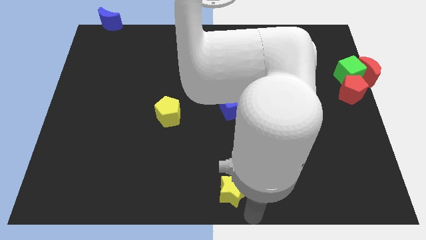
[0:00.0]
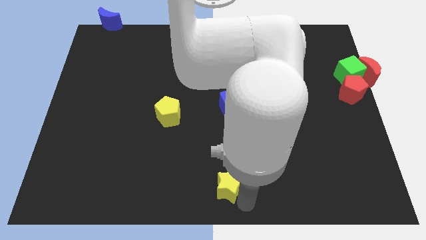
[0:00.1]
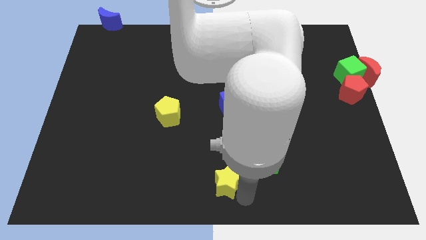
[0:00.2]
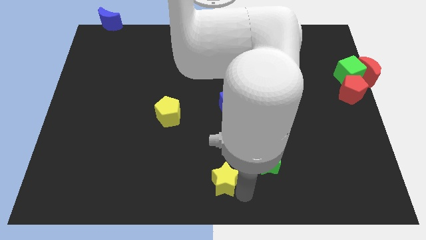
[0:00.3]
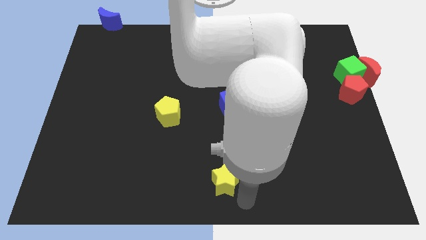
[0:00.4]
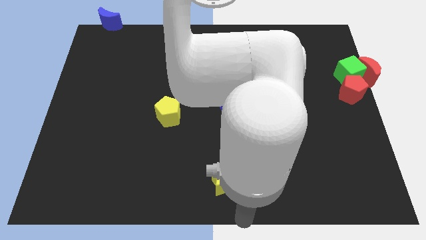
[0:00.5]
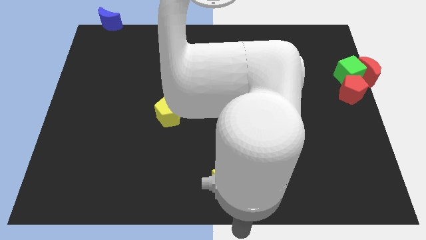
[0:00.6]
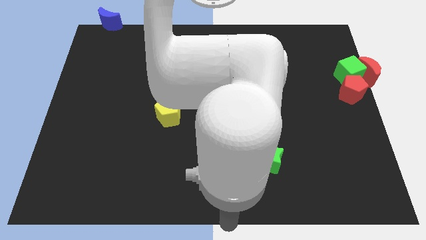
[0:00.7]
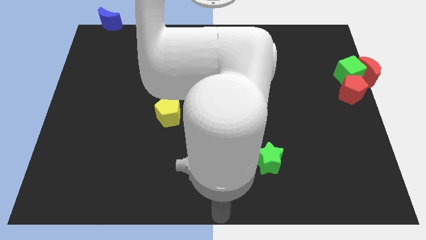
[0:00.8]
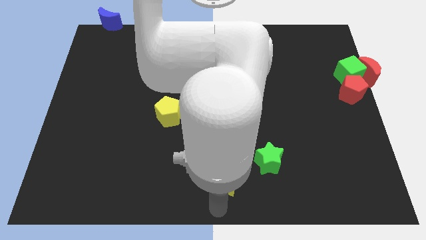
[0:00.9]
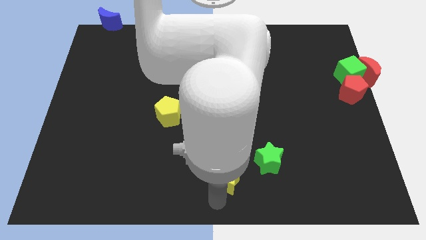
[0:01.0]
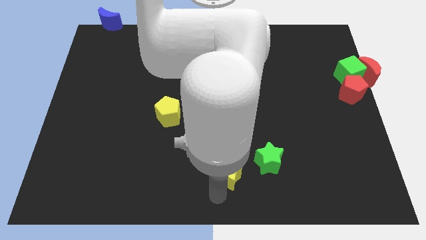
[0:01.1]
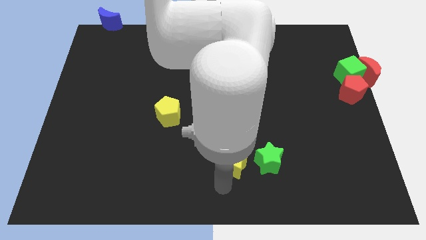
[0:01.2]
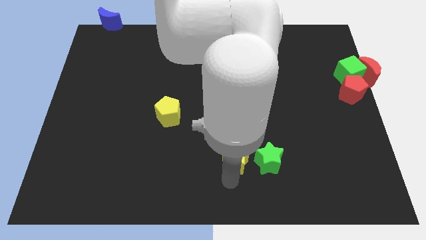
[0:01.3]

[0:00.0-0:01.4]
place the yellow star left to the green star

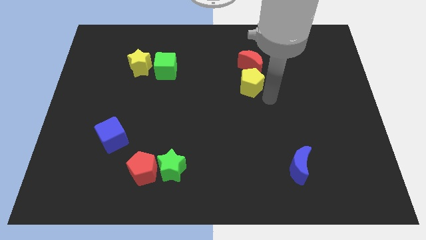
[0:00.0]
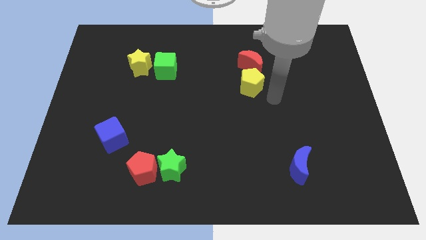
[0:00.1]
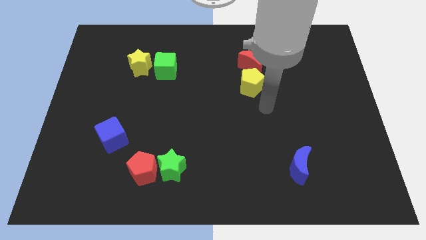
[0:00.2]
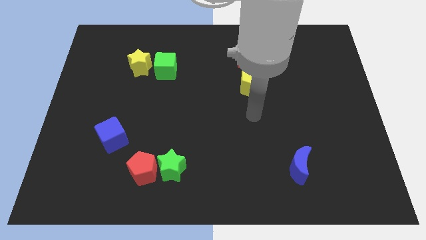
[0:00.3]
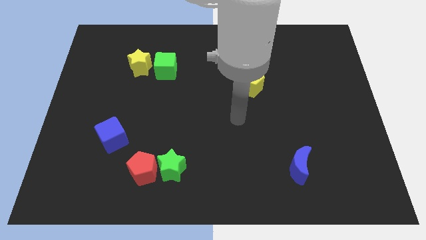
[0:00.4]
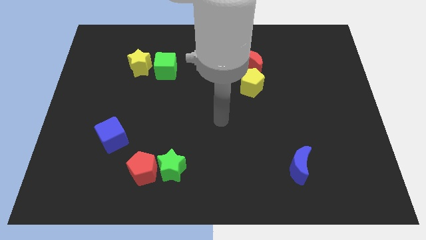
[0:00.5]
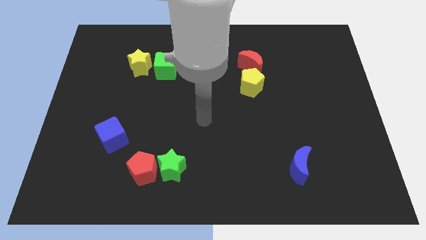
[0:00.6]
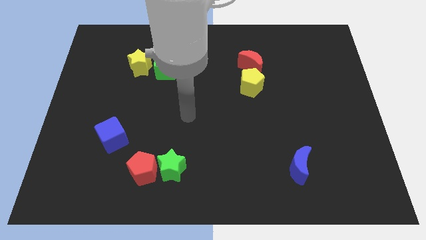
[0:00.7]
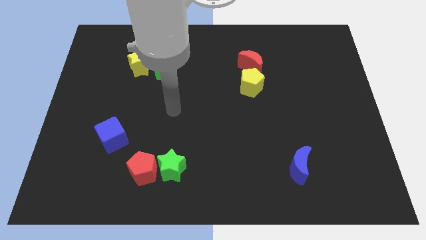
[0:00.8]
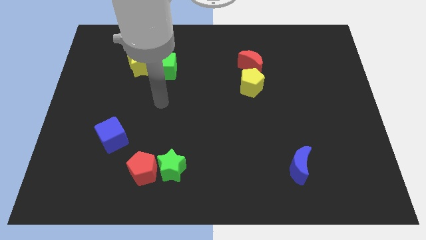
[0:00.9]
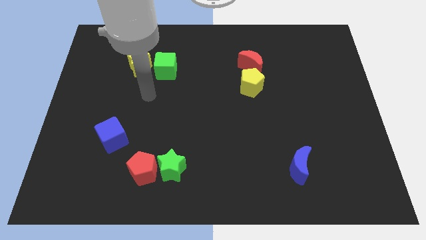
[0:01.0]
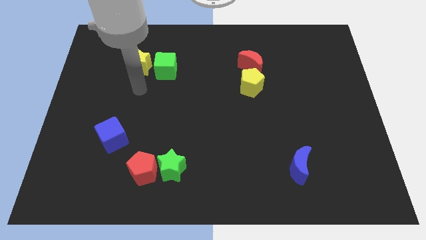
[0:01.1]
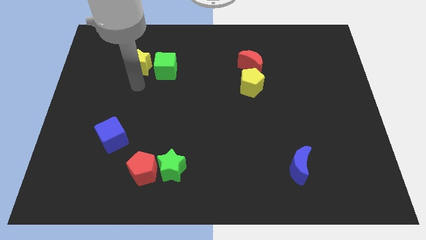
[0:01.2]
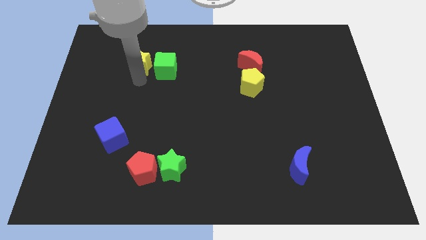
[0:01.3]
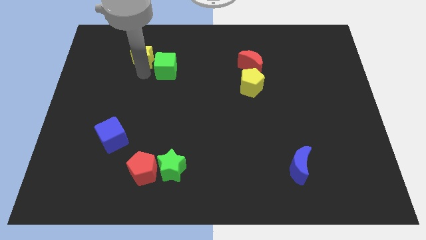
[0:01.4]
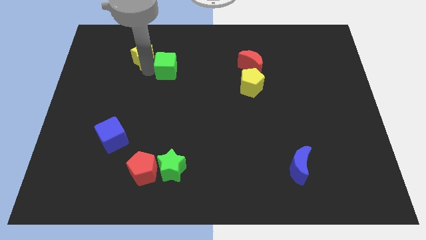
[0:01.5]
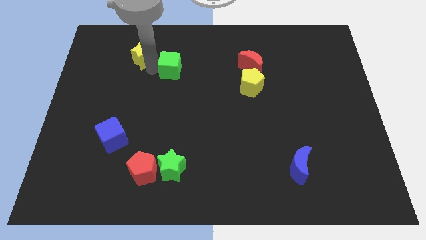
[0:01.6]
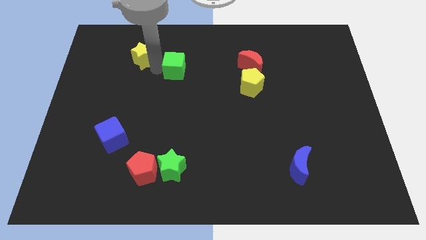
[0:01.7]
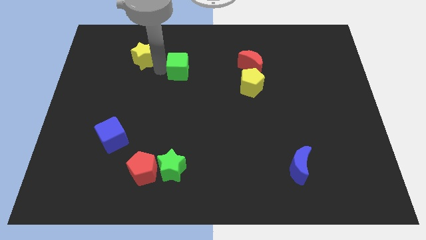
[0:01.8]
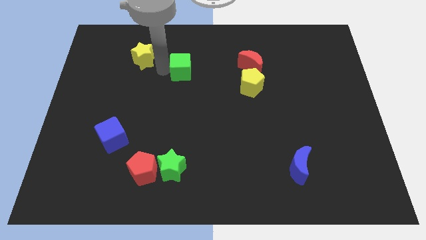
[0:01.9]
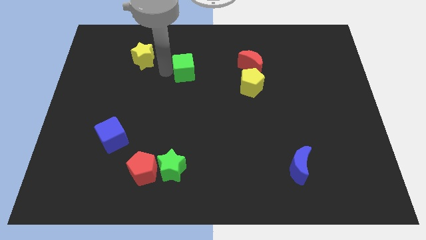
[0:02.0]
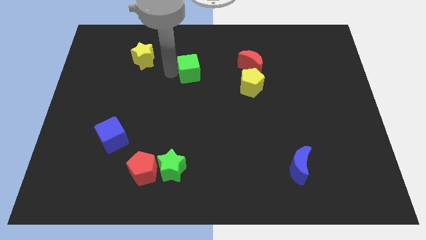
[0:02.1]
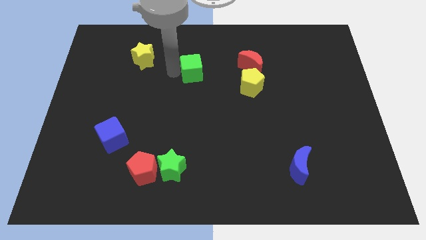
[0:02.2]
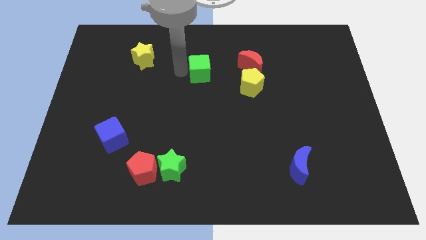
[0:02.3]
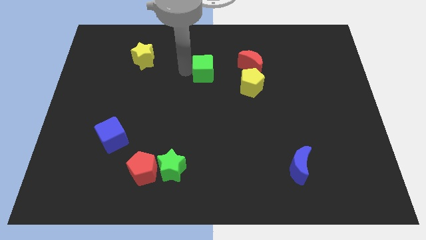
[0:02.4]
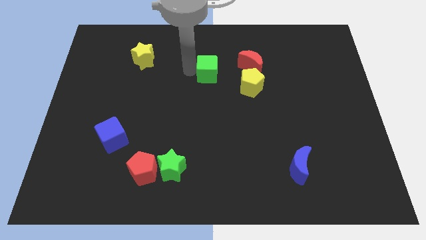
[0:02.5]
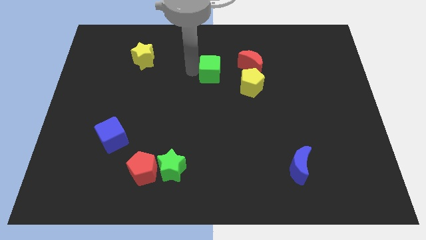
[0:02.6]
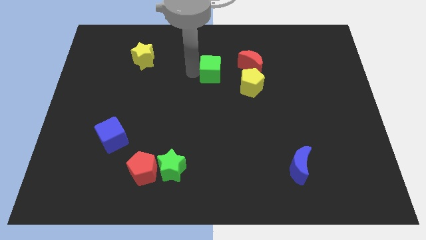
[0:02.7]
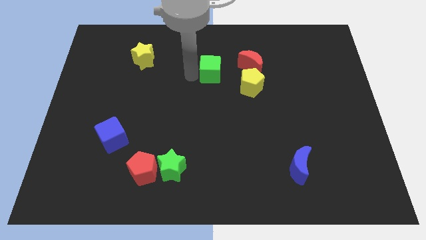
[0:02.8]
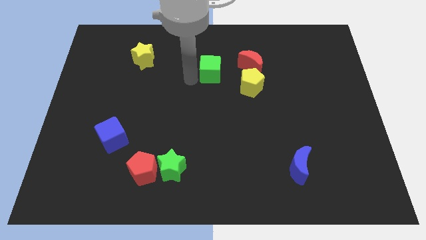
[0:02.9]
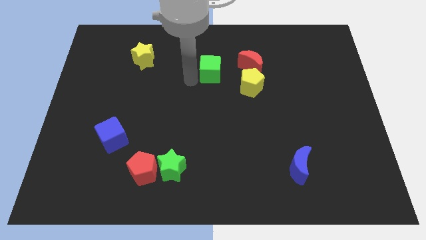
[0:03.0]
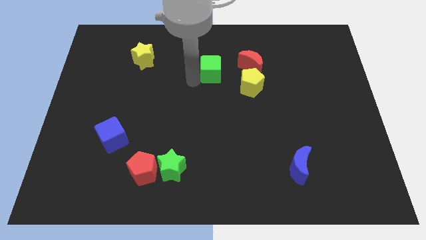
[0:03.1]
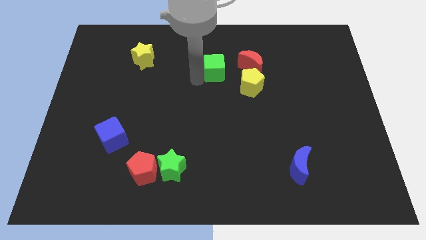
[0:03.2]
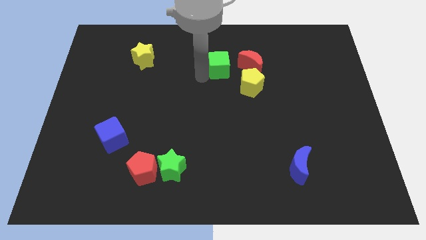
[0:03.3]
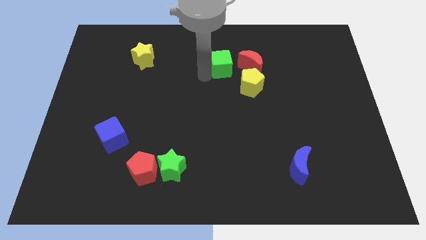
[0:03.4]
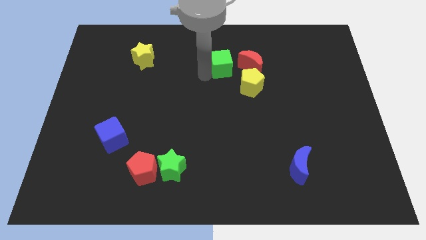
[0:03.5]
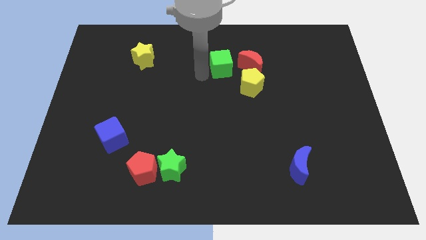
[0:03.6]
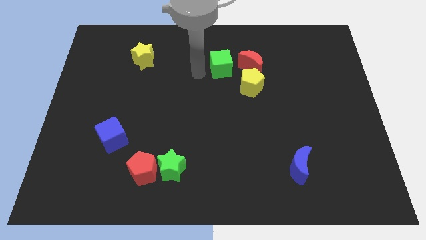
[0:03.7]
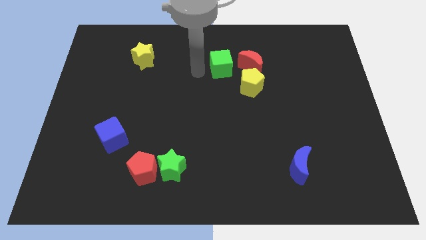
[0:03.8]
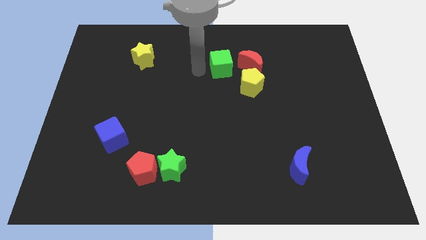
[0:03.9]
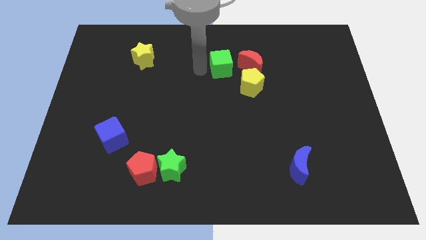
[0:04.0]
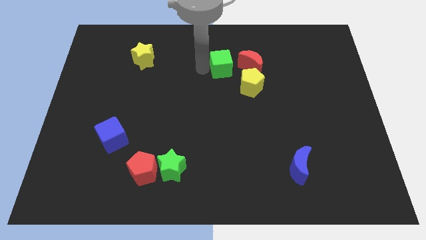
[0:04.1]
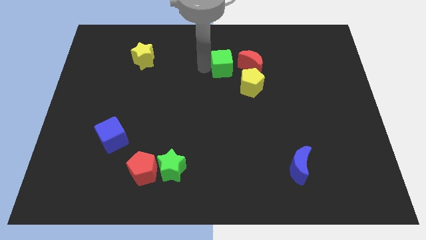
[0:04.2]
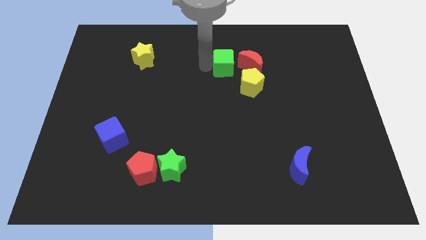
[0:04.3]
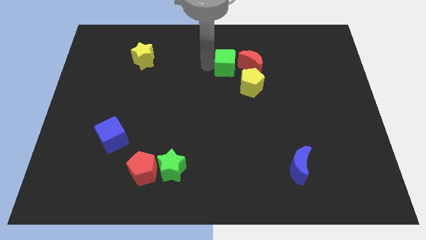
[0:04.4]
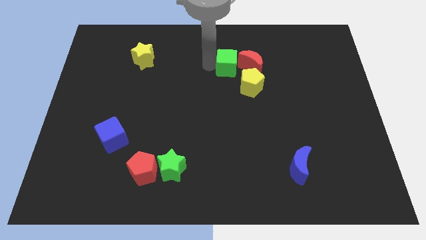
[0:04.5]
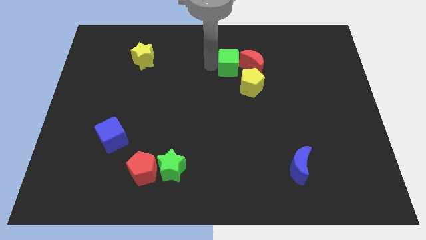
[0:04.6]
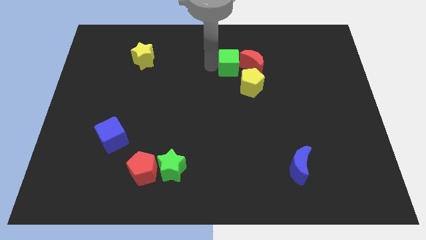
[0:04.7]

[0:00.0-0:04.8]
move the green cube into the red crescent

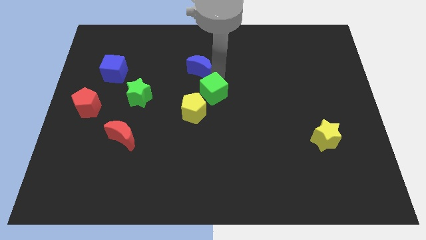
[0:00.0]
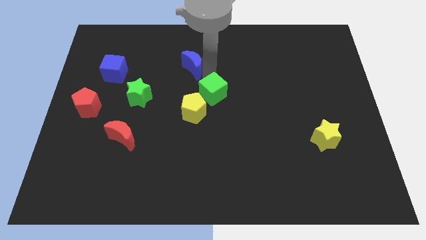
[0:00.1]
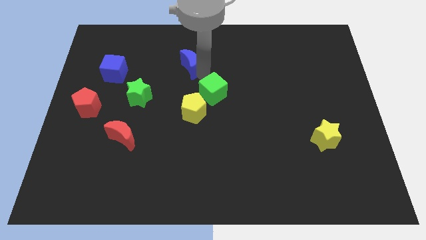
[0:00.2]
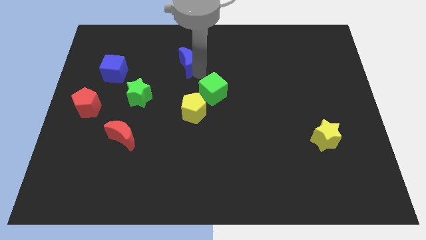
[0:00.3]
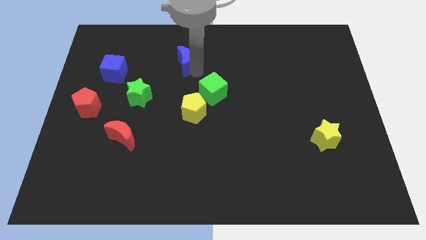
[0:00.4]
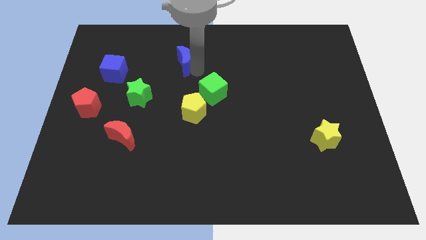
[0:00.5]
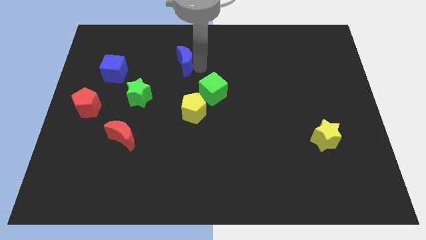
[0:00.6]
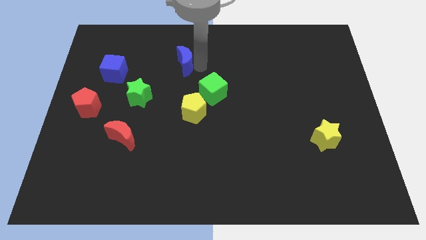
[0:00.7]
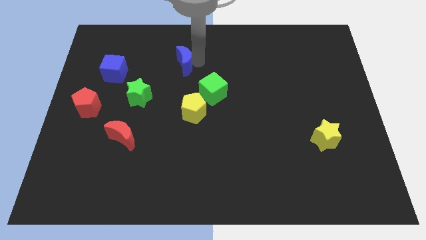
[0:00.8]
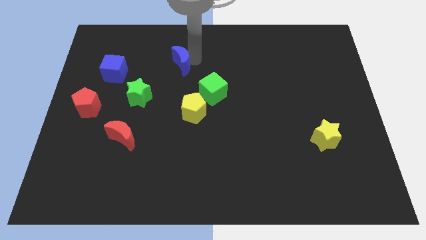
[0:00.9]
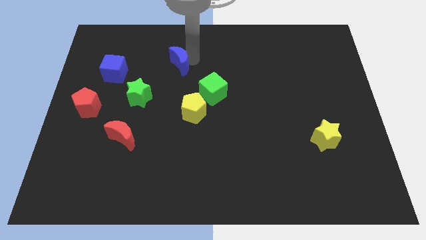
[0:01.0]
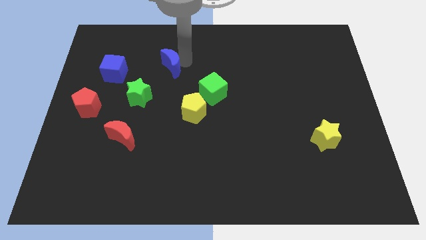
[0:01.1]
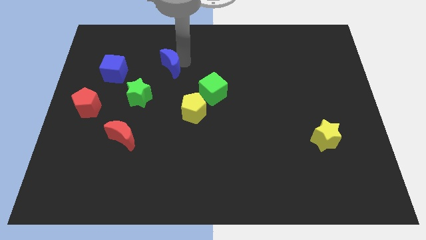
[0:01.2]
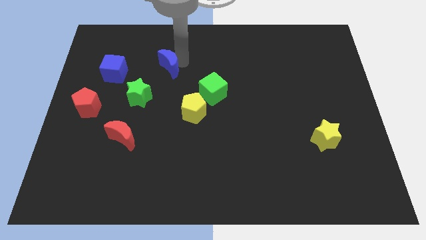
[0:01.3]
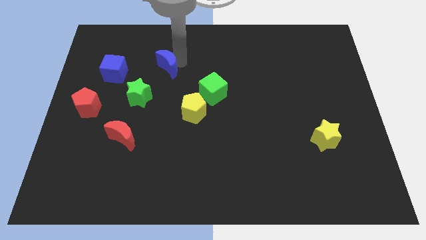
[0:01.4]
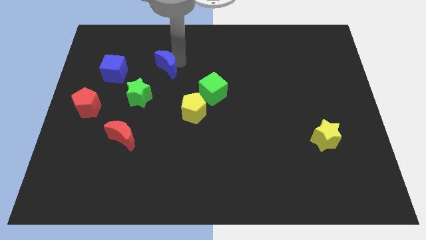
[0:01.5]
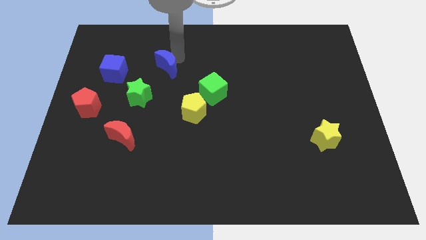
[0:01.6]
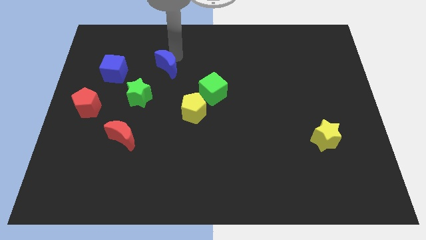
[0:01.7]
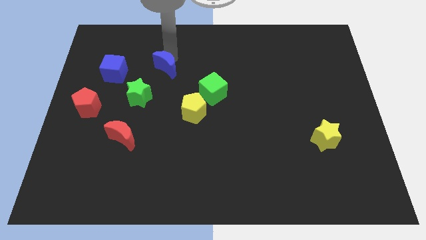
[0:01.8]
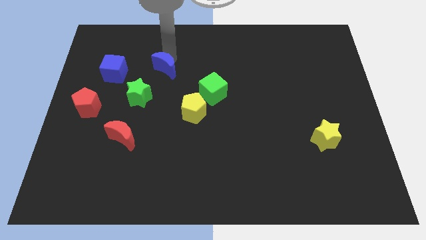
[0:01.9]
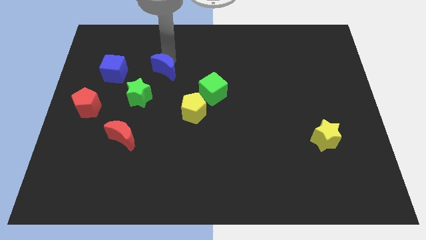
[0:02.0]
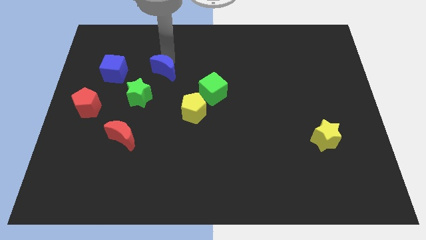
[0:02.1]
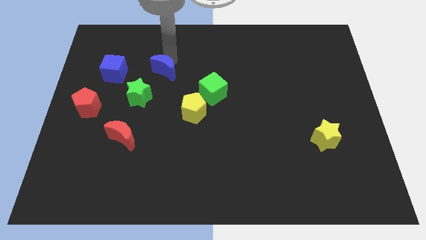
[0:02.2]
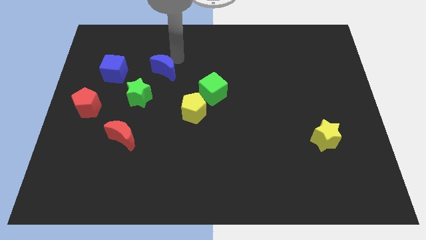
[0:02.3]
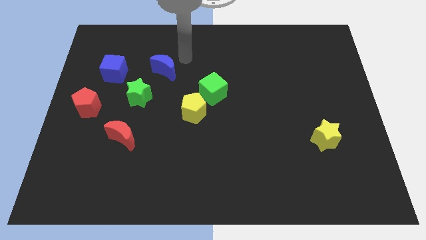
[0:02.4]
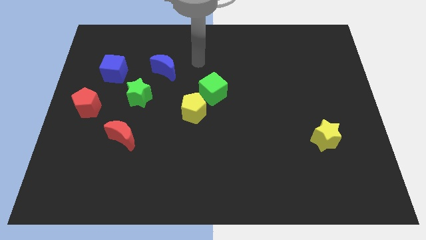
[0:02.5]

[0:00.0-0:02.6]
separate the blue moon from the green cube

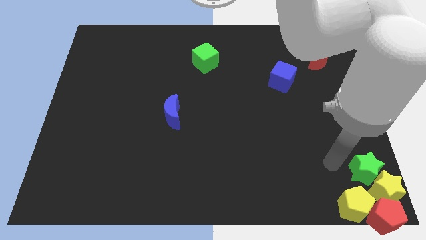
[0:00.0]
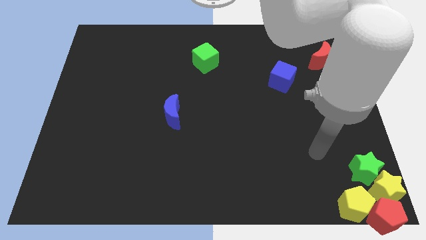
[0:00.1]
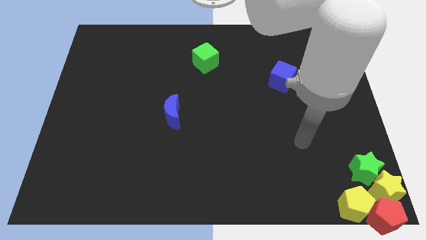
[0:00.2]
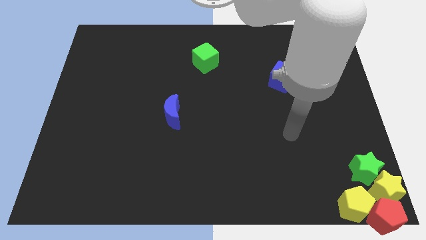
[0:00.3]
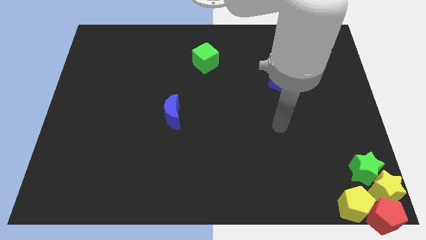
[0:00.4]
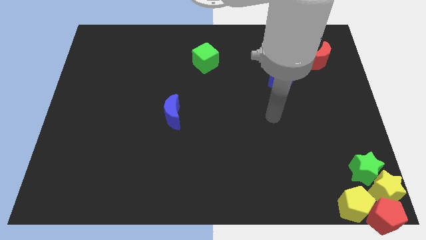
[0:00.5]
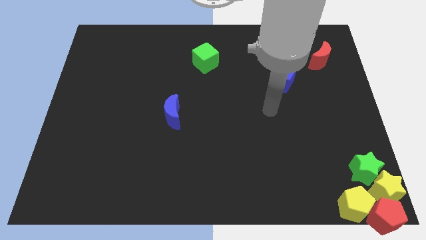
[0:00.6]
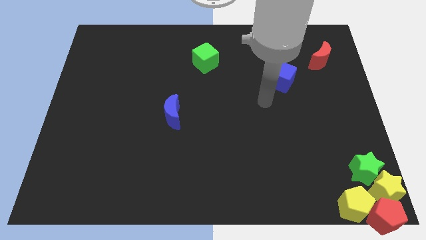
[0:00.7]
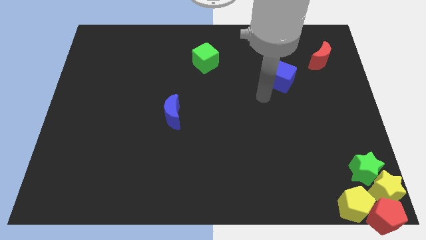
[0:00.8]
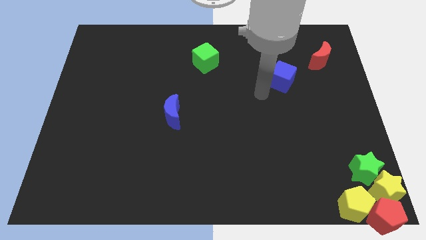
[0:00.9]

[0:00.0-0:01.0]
move your arm towards the top side of the board
